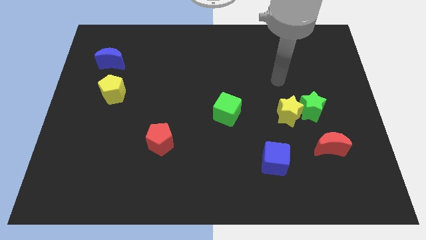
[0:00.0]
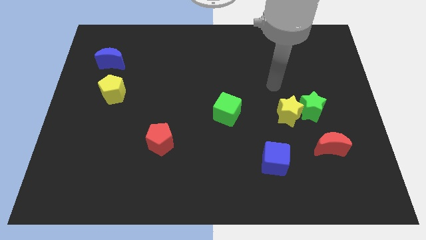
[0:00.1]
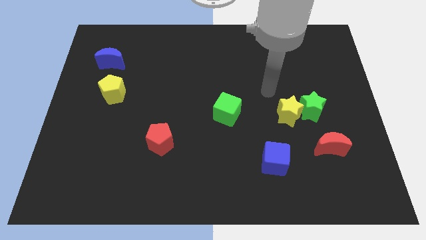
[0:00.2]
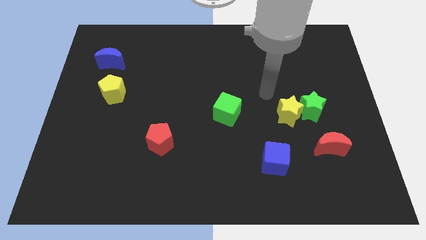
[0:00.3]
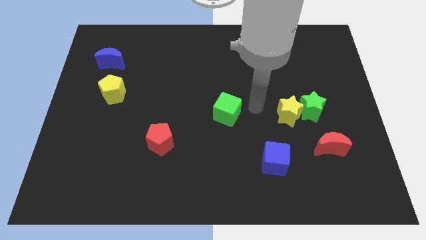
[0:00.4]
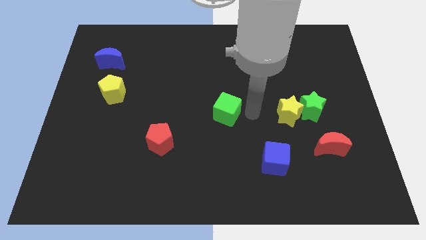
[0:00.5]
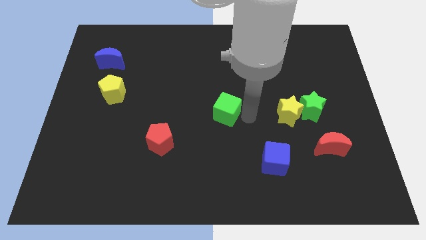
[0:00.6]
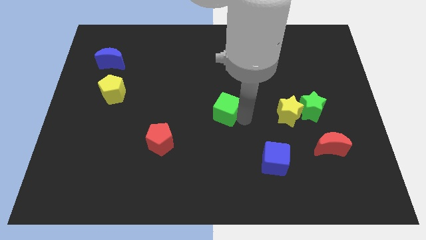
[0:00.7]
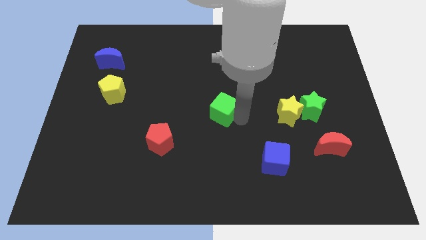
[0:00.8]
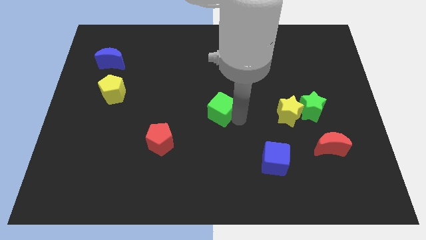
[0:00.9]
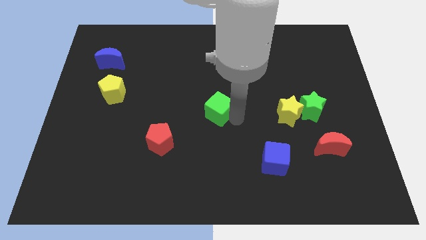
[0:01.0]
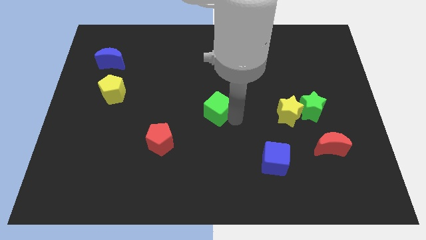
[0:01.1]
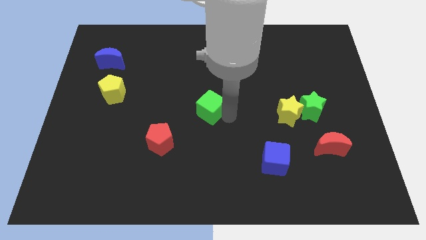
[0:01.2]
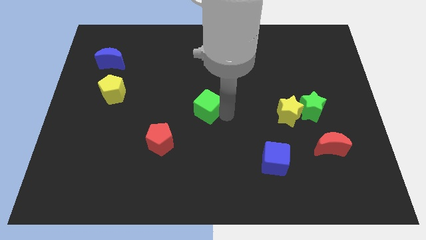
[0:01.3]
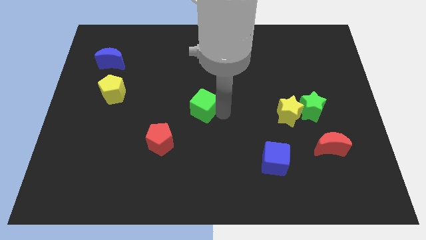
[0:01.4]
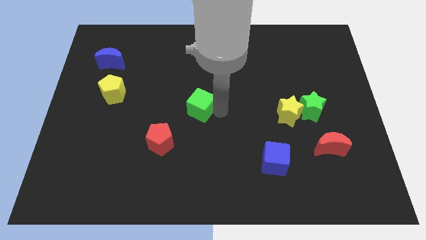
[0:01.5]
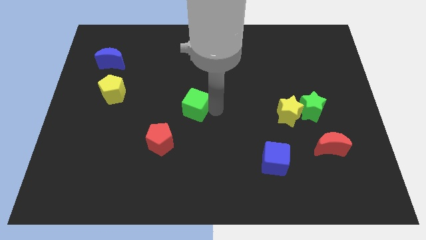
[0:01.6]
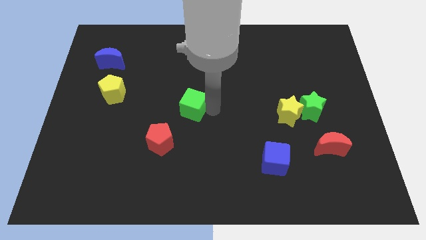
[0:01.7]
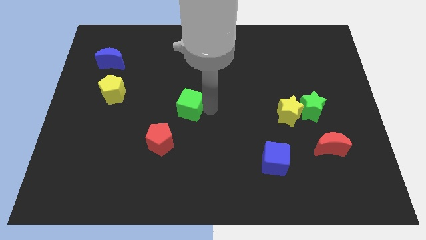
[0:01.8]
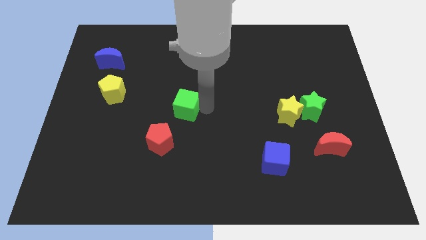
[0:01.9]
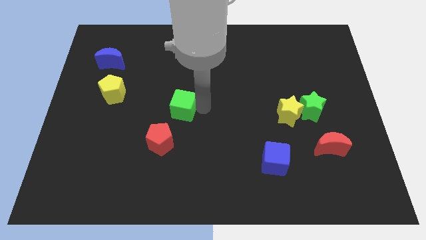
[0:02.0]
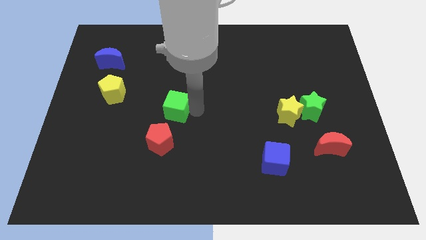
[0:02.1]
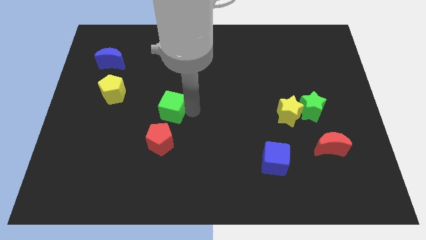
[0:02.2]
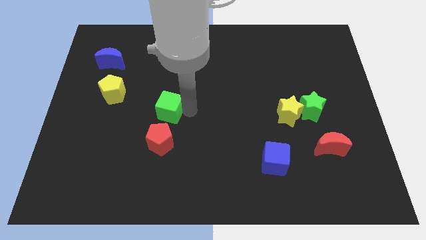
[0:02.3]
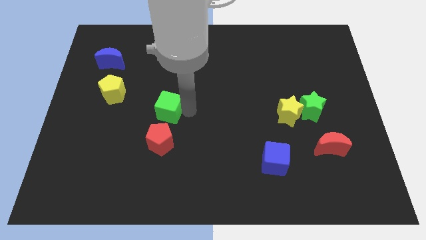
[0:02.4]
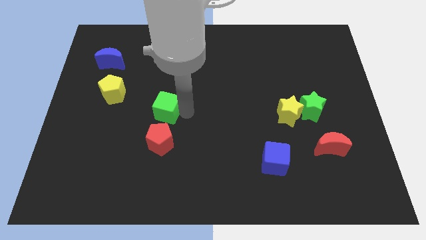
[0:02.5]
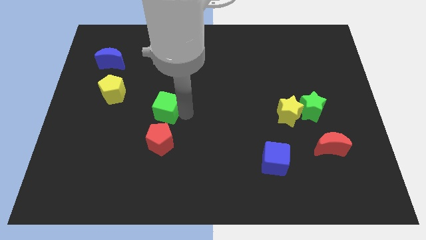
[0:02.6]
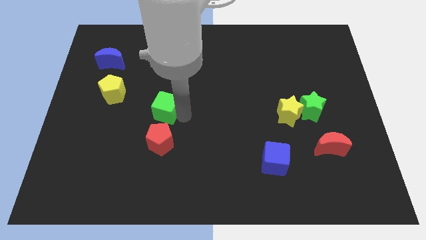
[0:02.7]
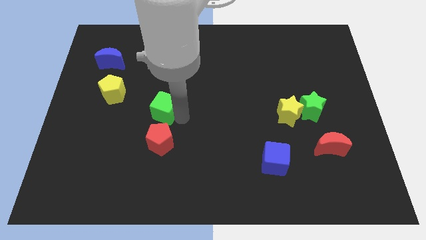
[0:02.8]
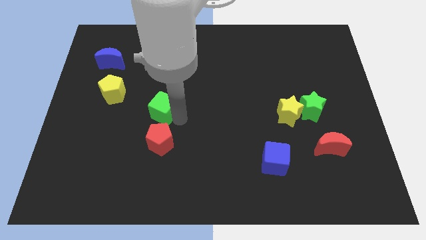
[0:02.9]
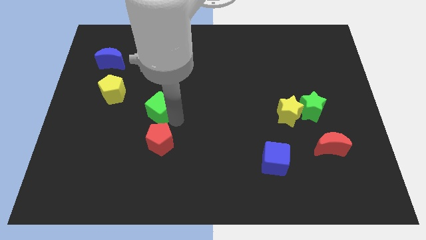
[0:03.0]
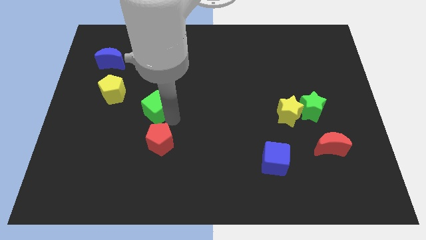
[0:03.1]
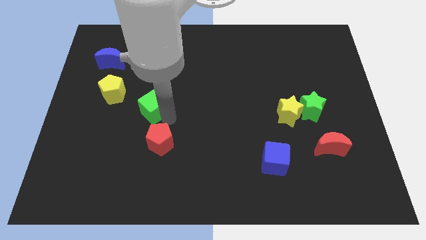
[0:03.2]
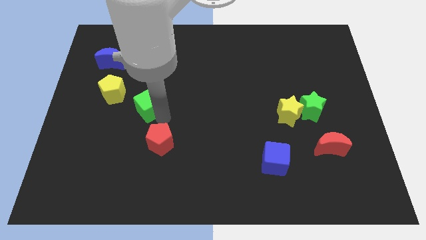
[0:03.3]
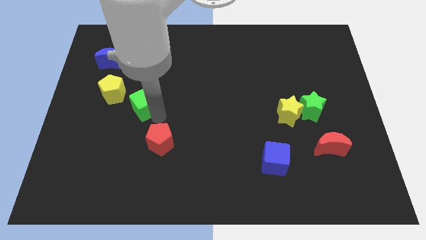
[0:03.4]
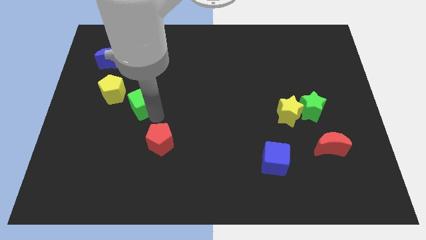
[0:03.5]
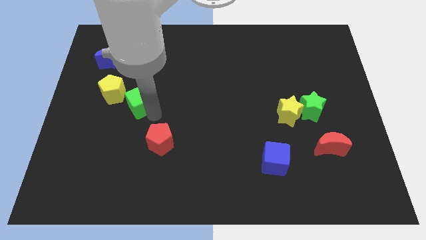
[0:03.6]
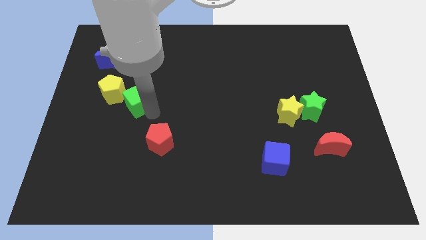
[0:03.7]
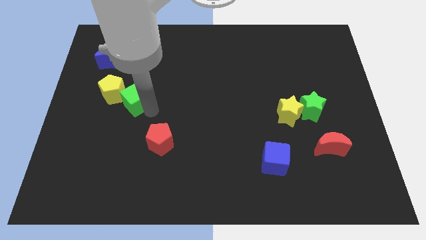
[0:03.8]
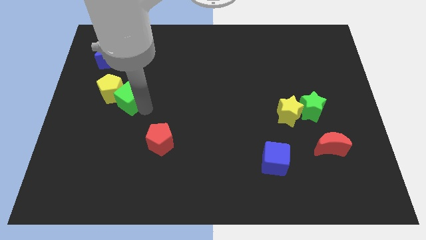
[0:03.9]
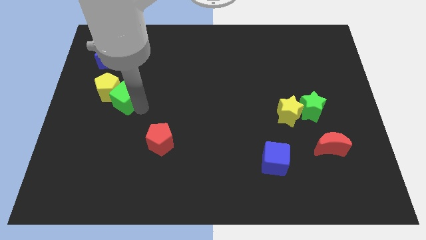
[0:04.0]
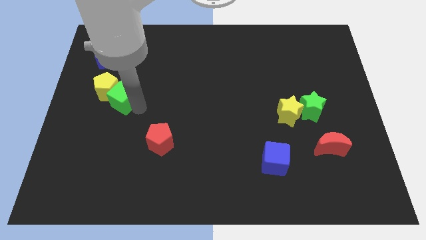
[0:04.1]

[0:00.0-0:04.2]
slide the green cube to the yellow pentagon

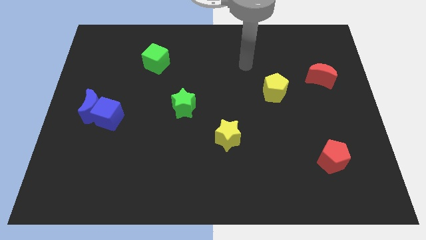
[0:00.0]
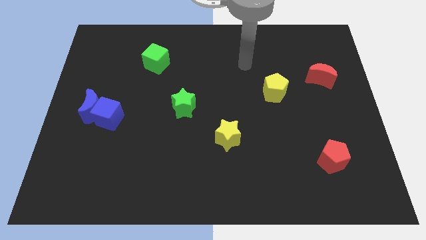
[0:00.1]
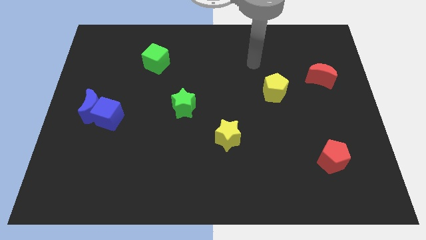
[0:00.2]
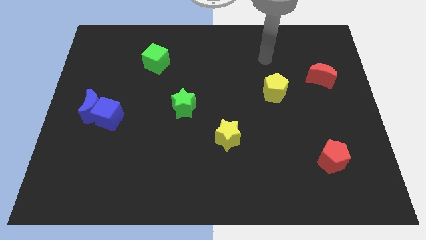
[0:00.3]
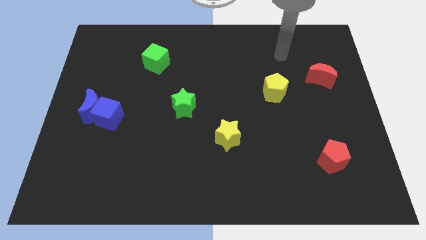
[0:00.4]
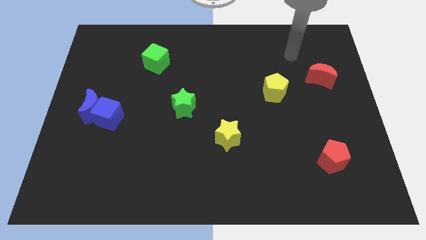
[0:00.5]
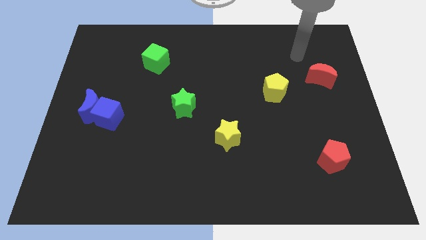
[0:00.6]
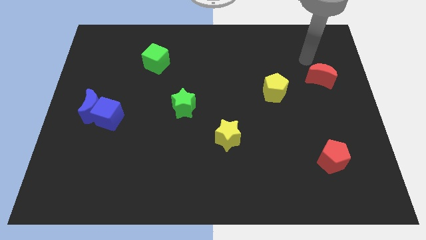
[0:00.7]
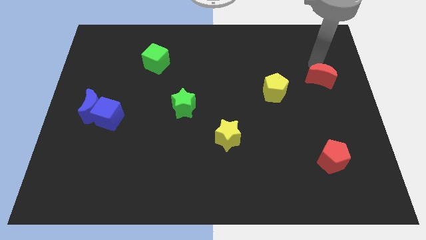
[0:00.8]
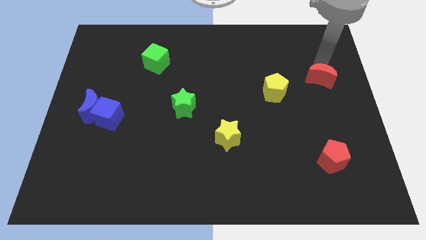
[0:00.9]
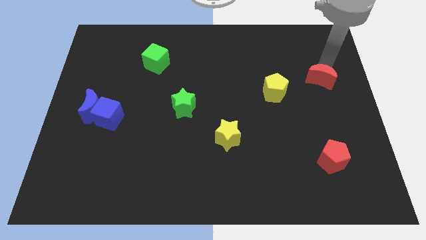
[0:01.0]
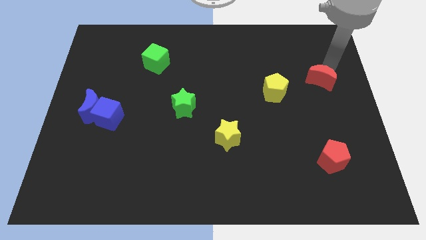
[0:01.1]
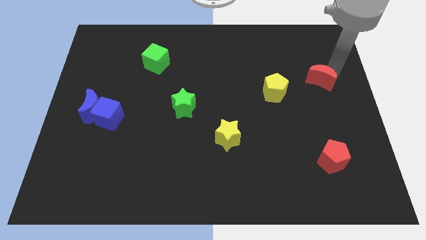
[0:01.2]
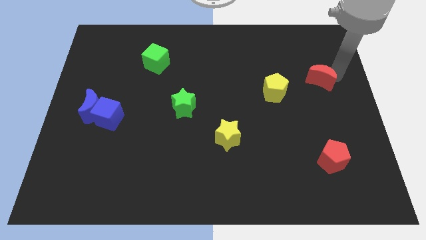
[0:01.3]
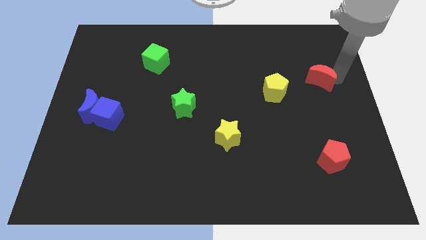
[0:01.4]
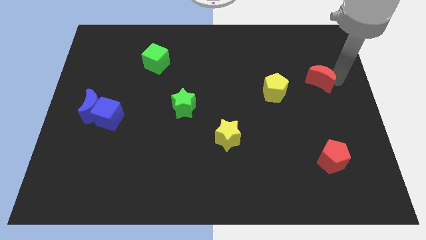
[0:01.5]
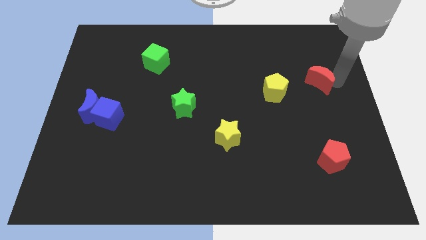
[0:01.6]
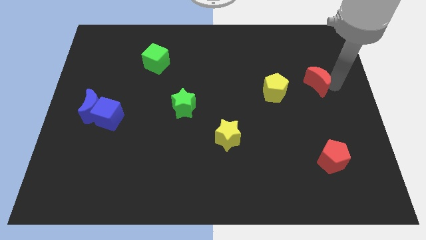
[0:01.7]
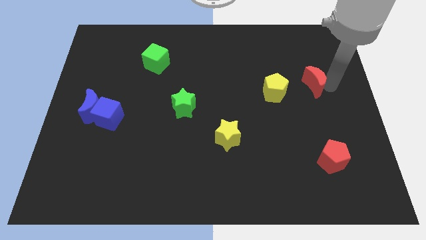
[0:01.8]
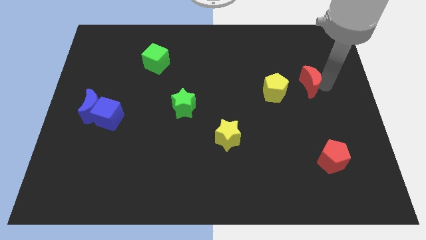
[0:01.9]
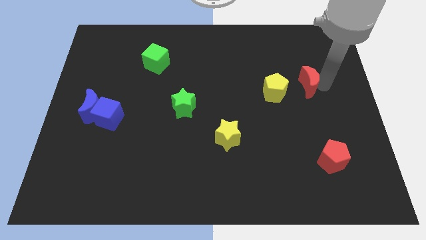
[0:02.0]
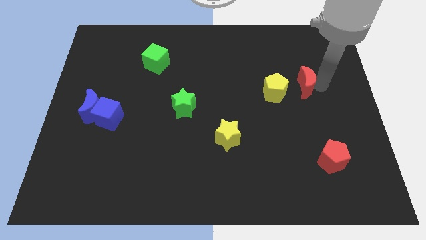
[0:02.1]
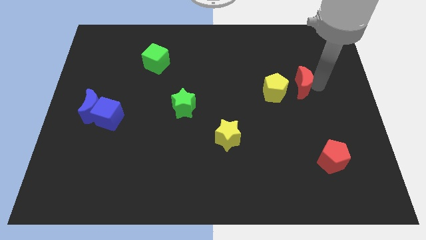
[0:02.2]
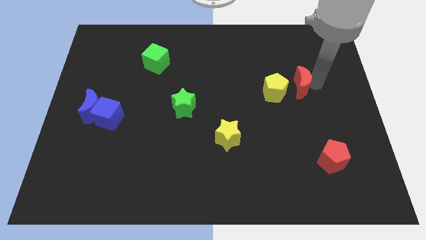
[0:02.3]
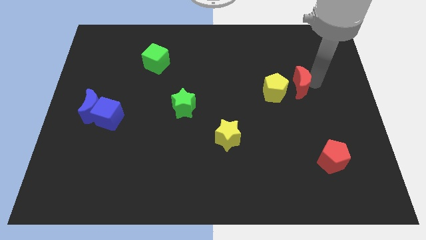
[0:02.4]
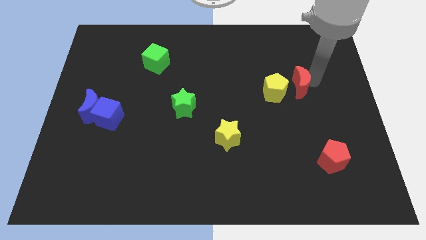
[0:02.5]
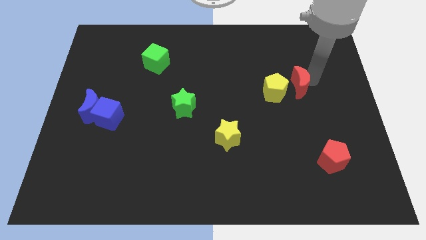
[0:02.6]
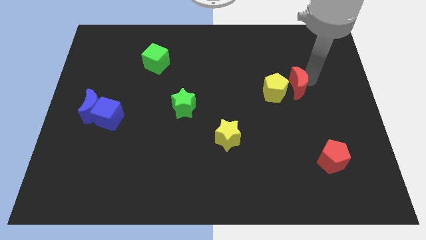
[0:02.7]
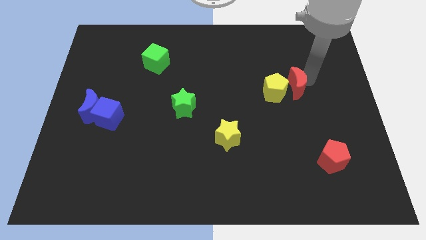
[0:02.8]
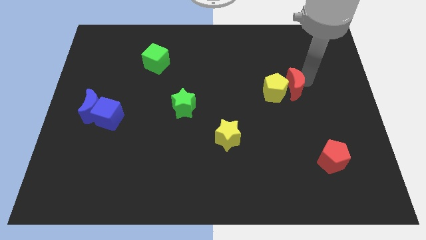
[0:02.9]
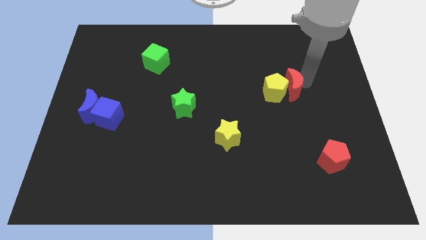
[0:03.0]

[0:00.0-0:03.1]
slide the red moon close to the yellow pentagon

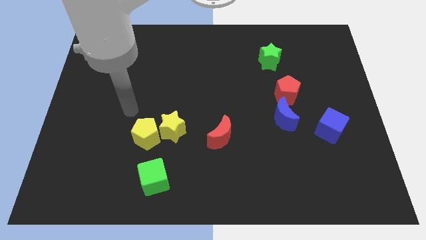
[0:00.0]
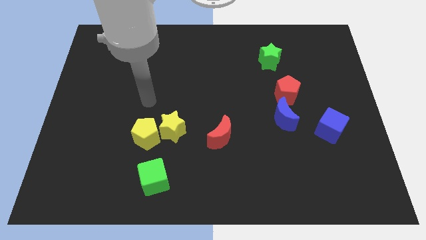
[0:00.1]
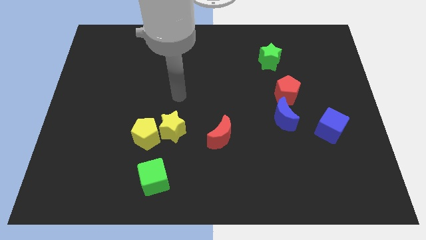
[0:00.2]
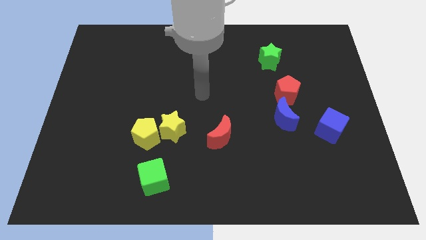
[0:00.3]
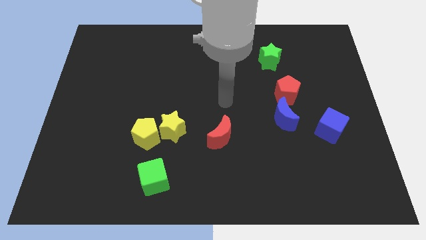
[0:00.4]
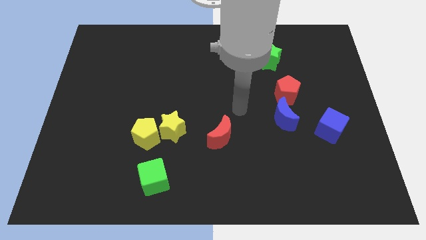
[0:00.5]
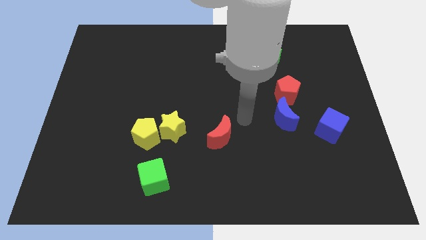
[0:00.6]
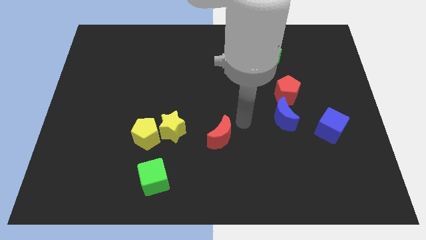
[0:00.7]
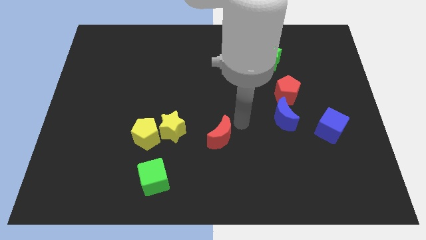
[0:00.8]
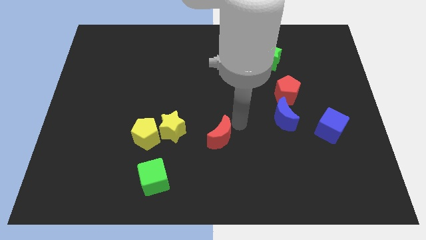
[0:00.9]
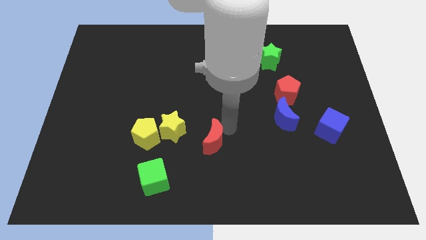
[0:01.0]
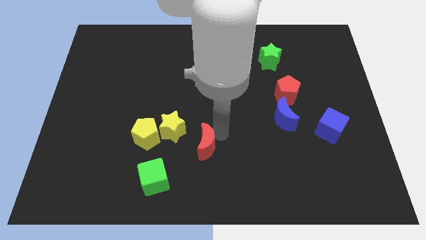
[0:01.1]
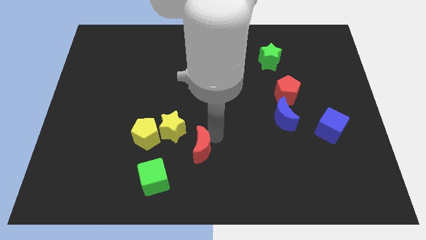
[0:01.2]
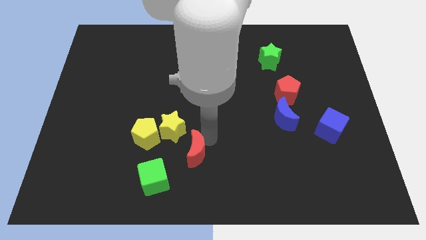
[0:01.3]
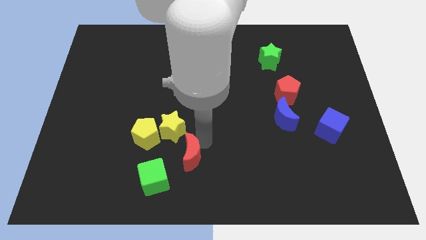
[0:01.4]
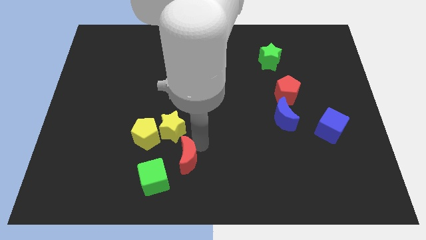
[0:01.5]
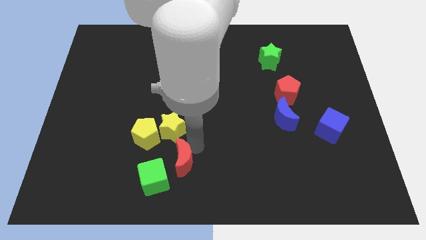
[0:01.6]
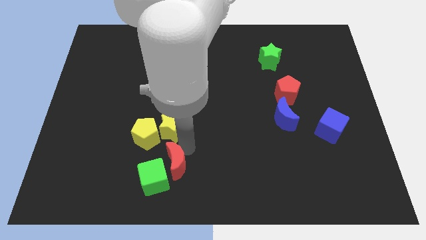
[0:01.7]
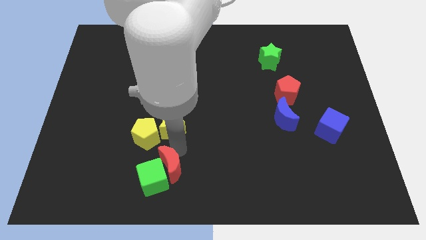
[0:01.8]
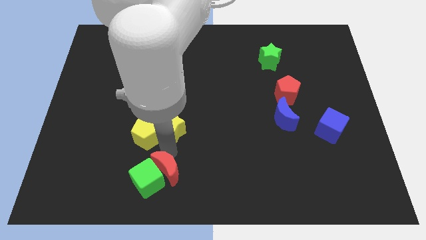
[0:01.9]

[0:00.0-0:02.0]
move the red moon next to the green cube
